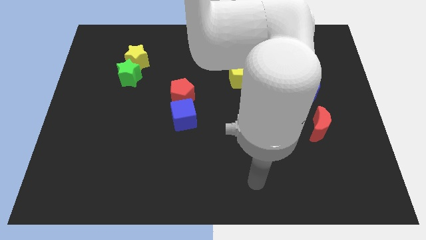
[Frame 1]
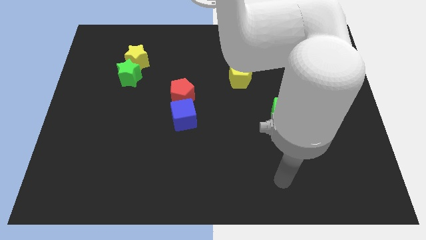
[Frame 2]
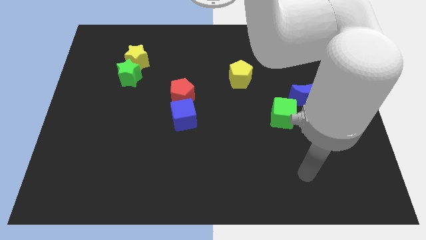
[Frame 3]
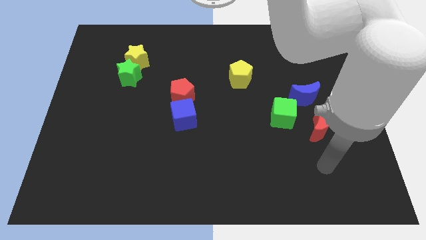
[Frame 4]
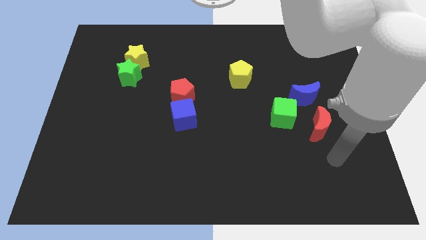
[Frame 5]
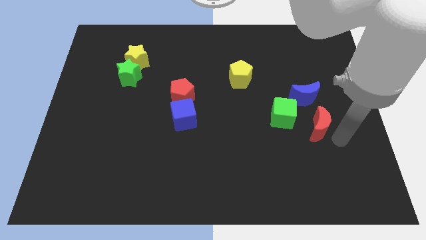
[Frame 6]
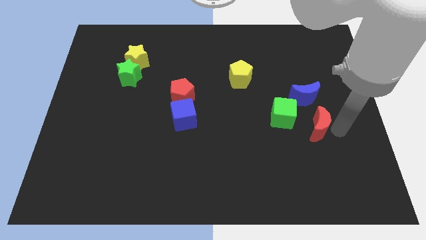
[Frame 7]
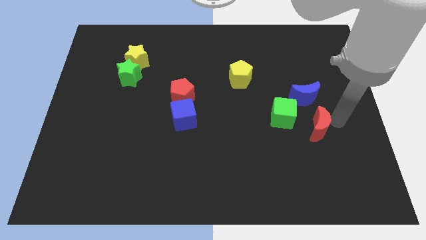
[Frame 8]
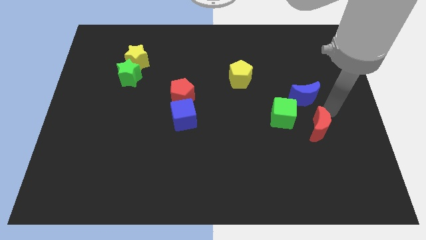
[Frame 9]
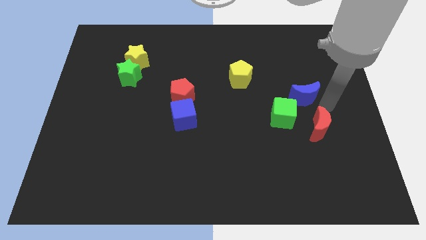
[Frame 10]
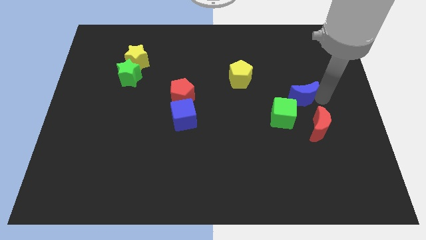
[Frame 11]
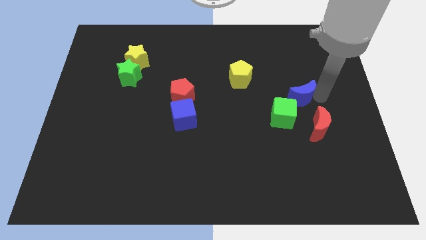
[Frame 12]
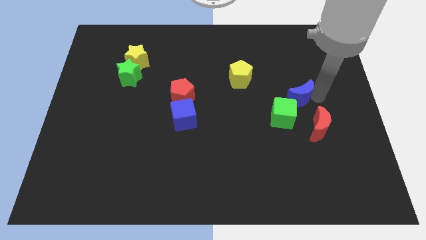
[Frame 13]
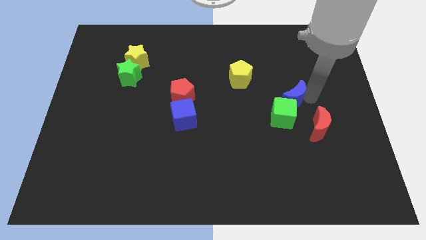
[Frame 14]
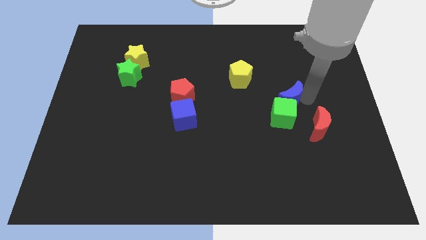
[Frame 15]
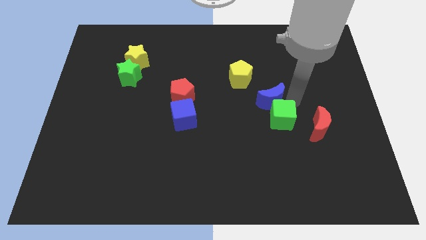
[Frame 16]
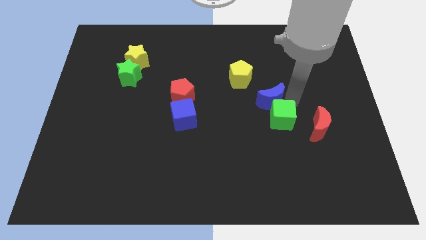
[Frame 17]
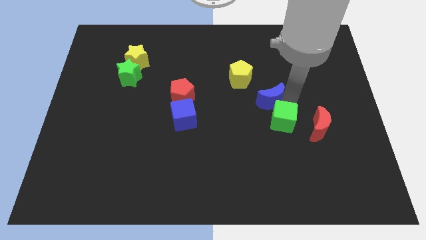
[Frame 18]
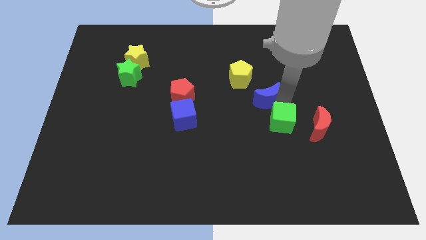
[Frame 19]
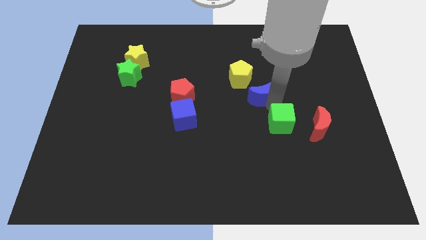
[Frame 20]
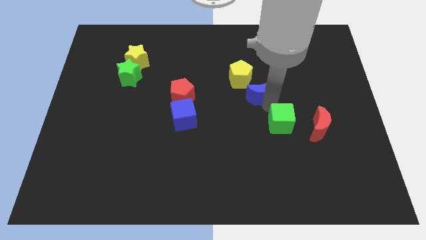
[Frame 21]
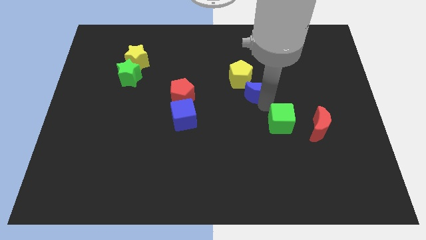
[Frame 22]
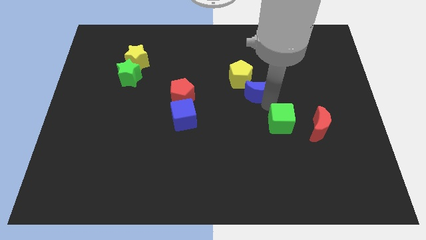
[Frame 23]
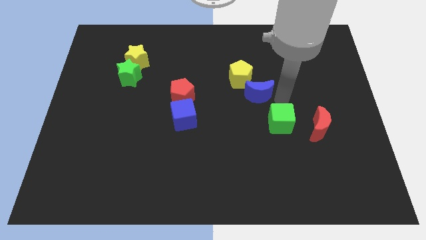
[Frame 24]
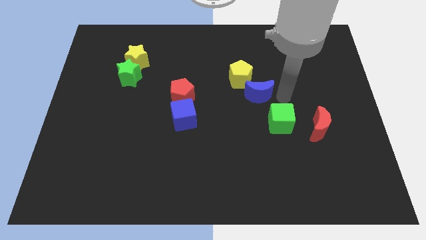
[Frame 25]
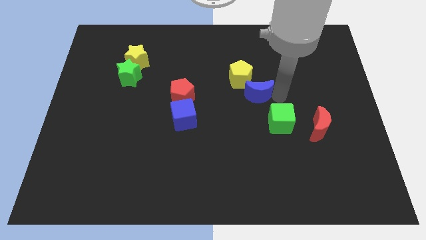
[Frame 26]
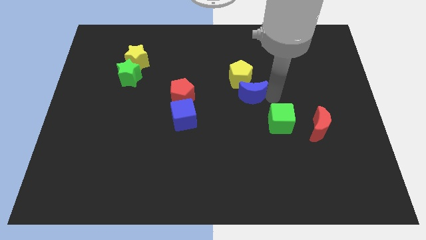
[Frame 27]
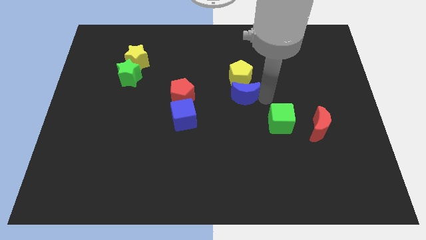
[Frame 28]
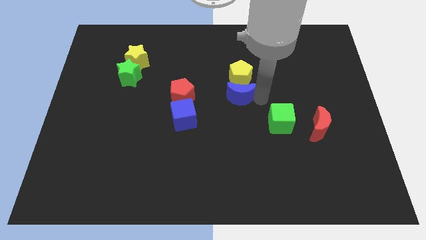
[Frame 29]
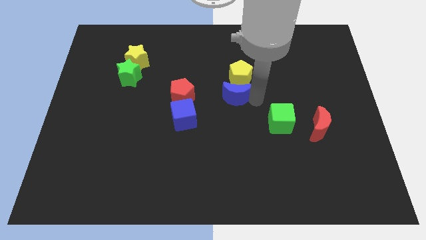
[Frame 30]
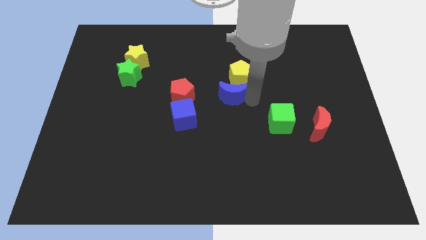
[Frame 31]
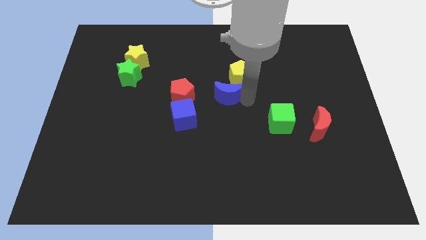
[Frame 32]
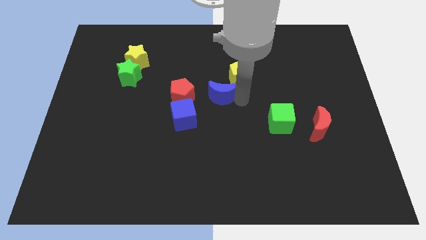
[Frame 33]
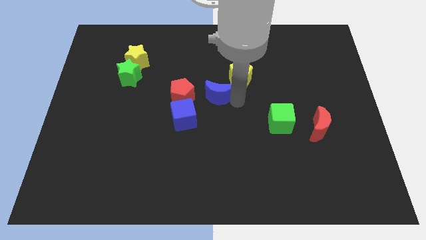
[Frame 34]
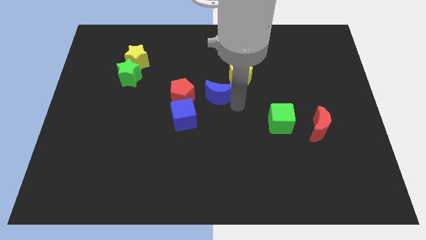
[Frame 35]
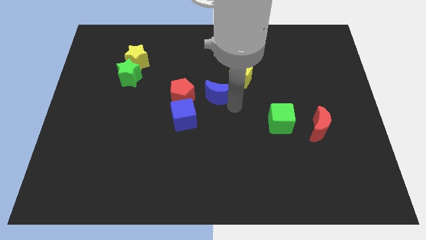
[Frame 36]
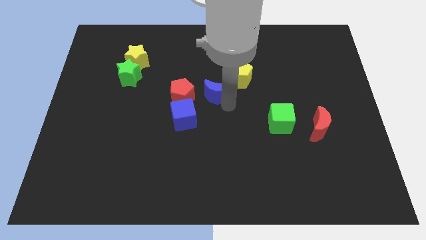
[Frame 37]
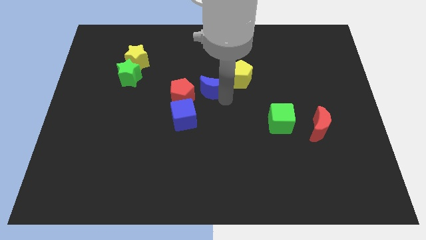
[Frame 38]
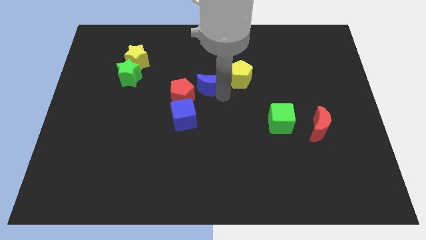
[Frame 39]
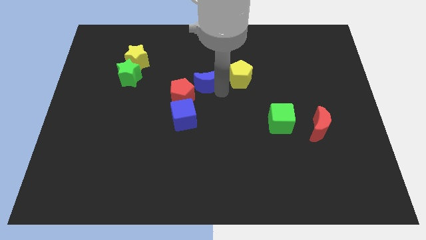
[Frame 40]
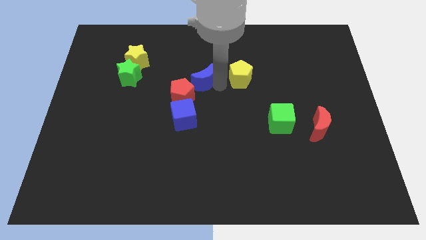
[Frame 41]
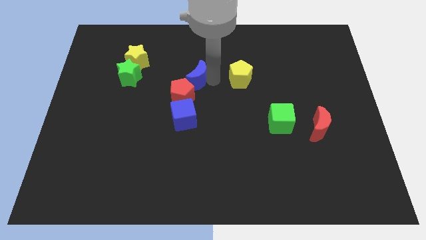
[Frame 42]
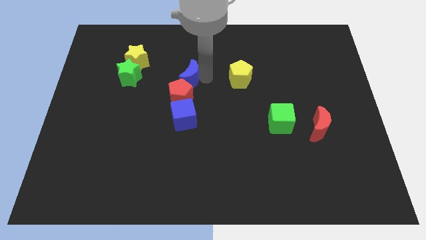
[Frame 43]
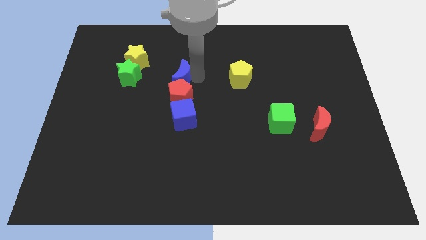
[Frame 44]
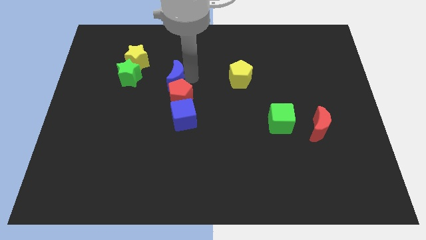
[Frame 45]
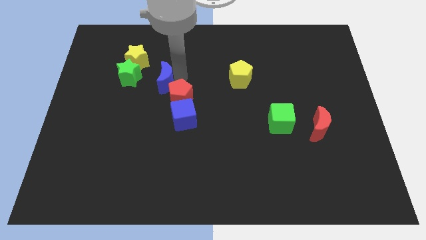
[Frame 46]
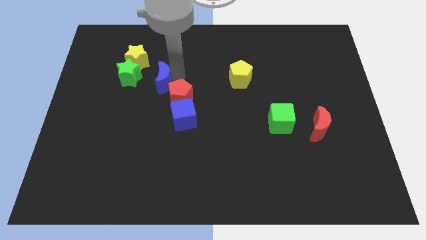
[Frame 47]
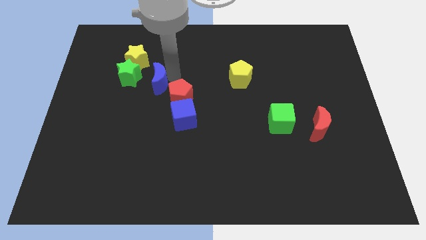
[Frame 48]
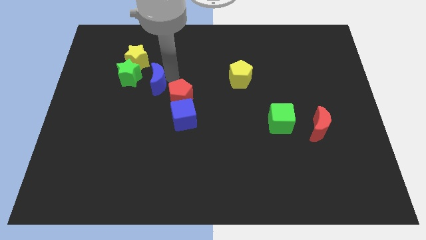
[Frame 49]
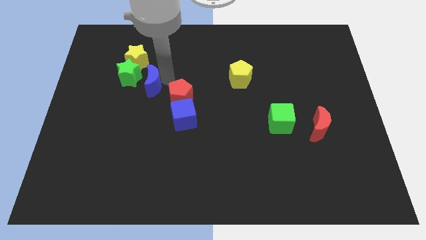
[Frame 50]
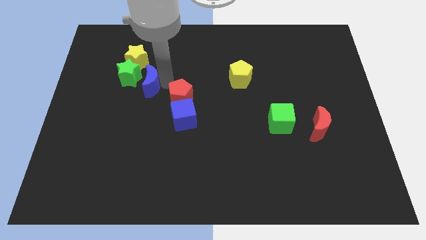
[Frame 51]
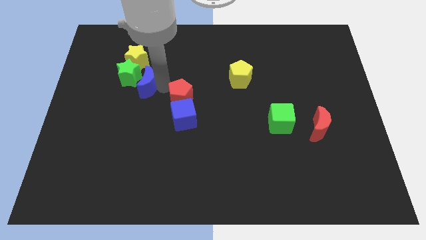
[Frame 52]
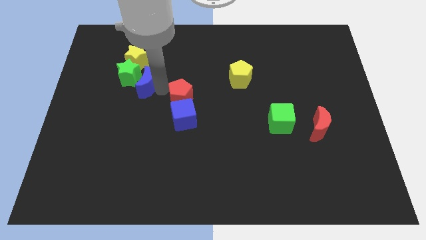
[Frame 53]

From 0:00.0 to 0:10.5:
put the blue moon next to the green star
